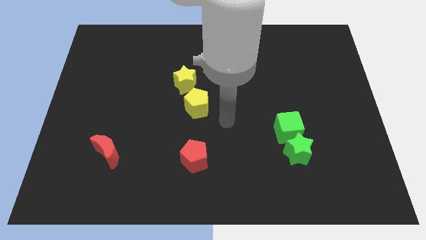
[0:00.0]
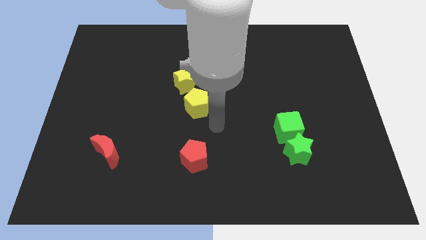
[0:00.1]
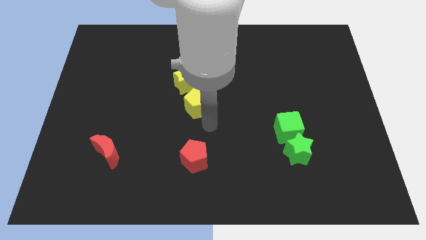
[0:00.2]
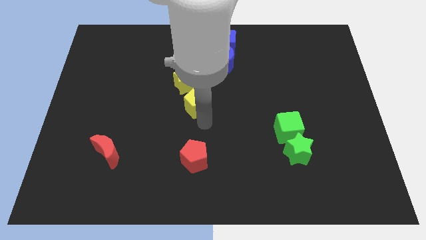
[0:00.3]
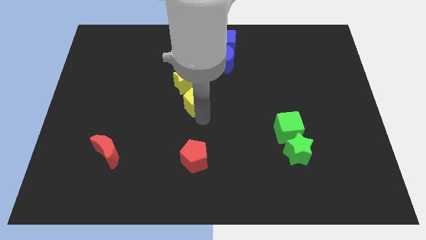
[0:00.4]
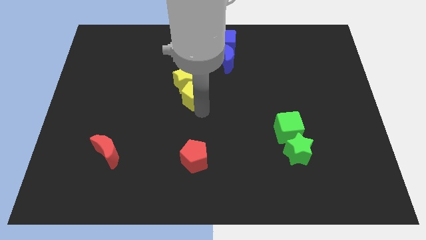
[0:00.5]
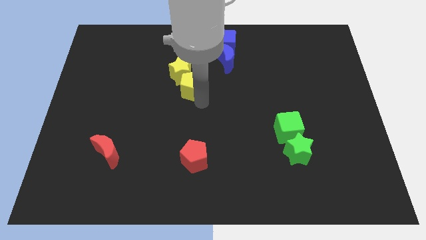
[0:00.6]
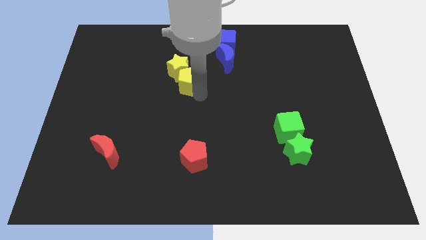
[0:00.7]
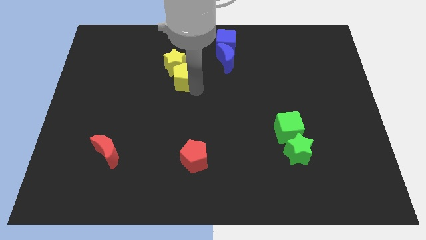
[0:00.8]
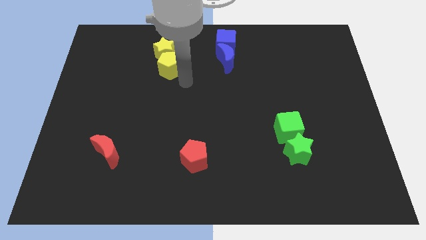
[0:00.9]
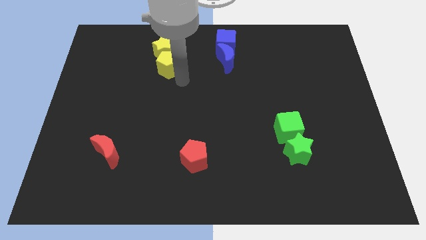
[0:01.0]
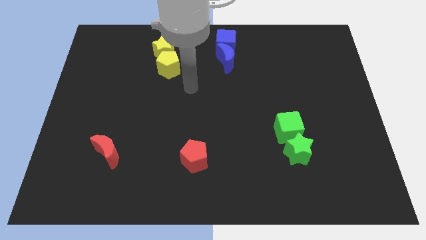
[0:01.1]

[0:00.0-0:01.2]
push the yellow pentagon into the yellow star

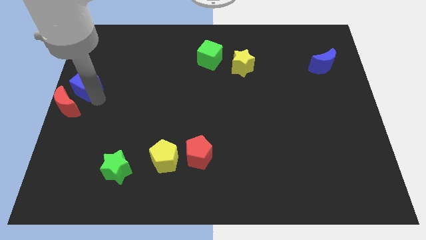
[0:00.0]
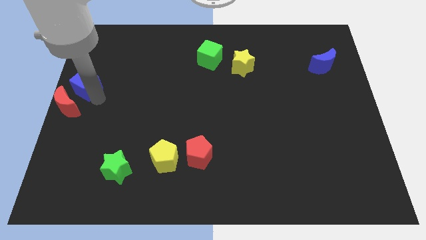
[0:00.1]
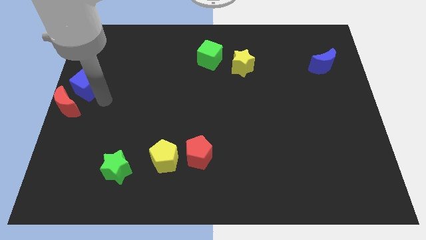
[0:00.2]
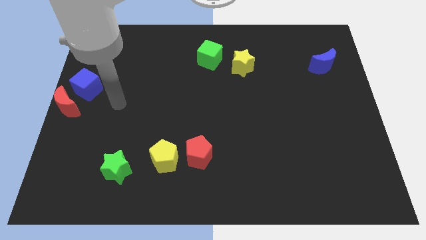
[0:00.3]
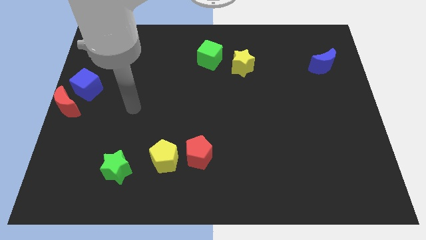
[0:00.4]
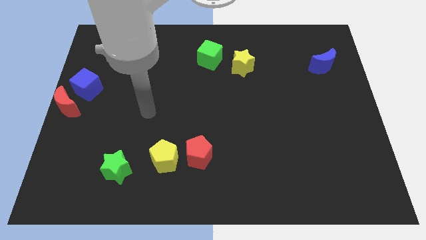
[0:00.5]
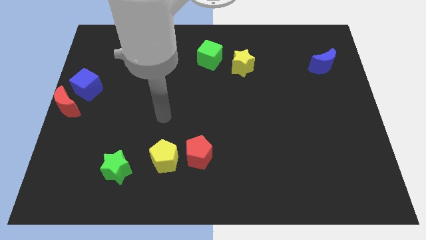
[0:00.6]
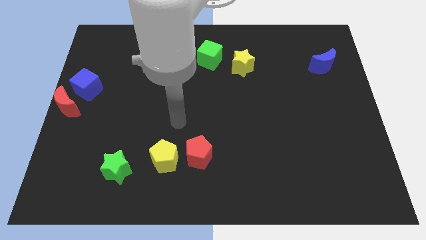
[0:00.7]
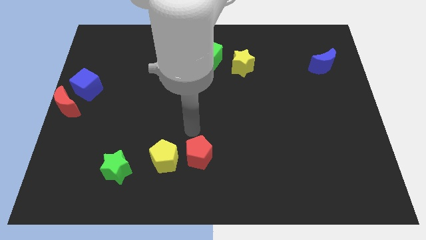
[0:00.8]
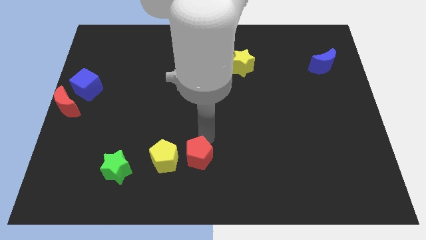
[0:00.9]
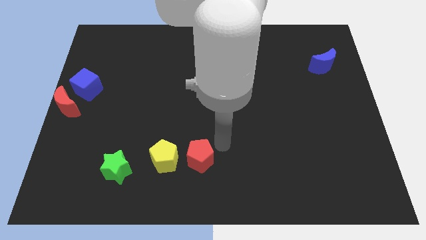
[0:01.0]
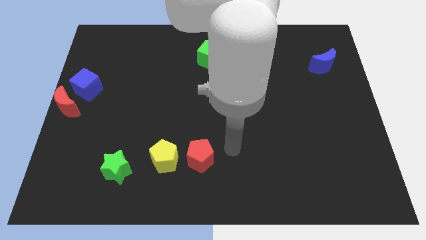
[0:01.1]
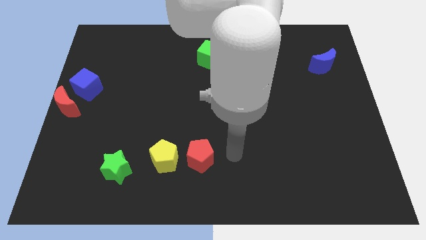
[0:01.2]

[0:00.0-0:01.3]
place your arm to the right side of the red pentagon

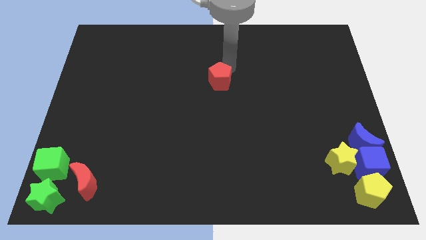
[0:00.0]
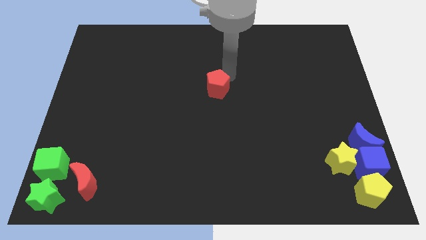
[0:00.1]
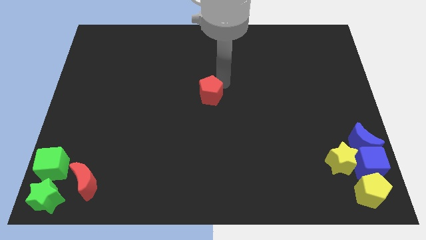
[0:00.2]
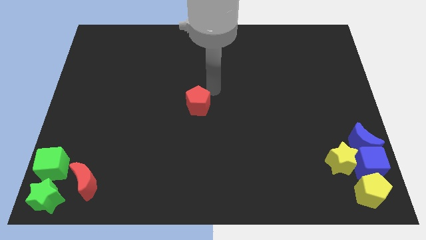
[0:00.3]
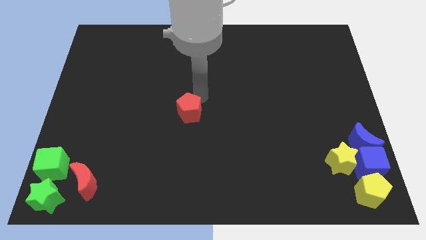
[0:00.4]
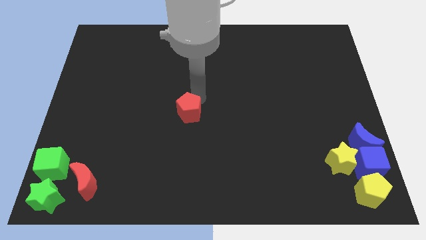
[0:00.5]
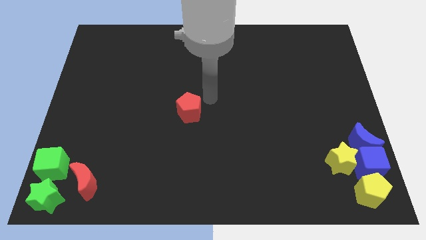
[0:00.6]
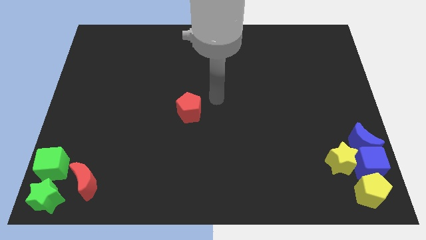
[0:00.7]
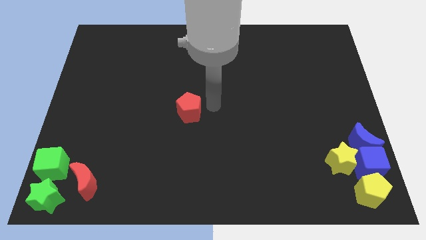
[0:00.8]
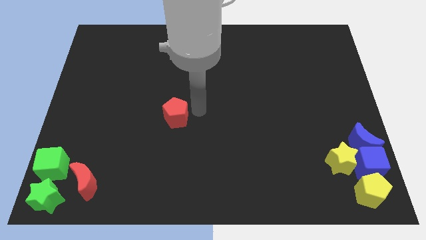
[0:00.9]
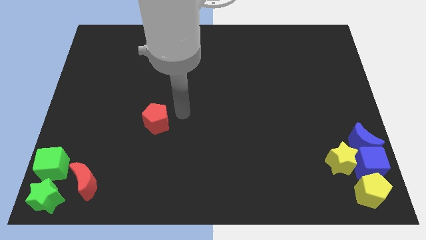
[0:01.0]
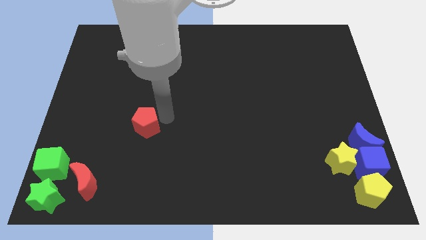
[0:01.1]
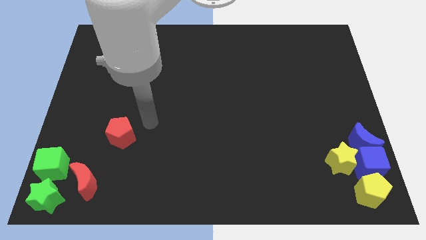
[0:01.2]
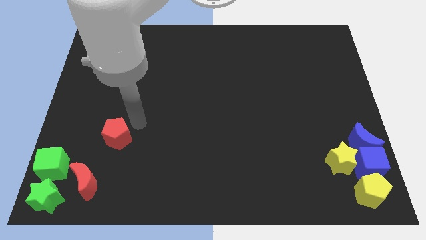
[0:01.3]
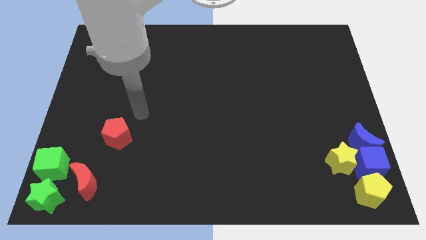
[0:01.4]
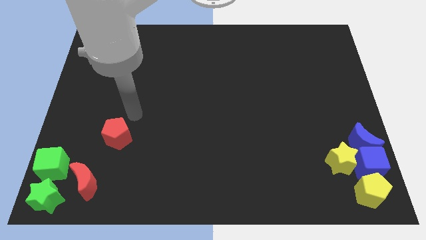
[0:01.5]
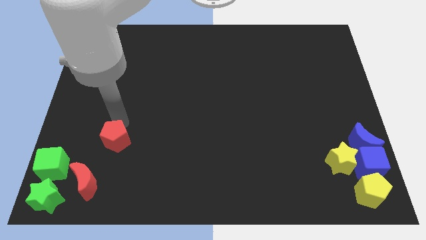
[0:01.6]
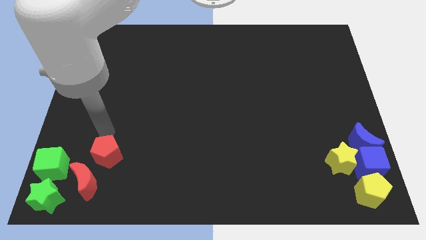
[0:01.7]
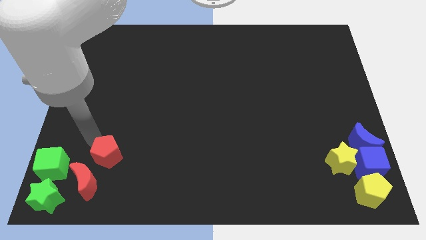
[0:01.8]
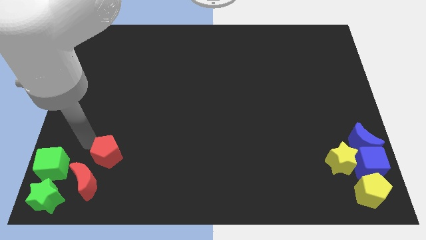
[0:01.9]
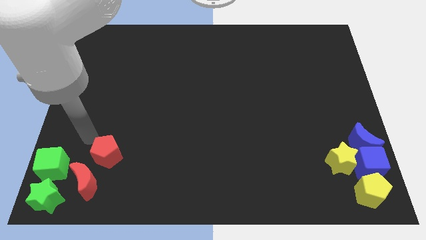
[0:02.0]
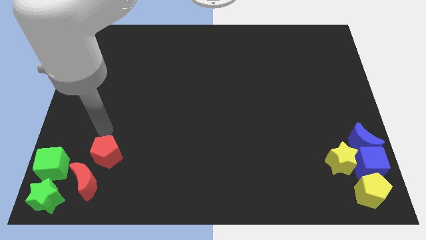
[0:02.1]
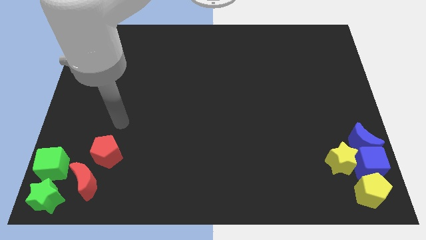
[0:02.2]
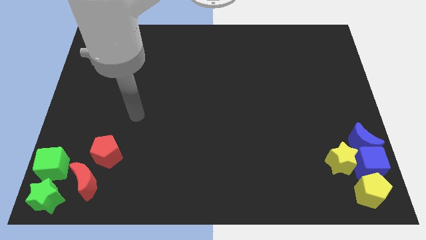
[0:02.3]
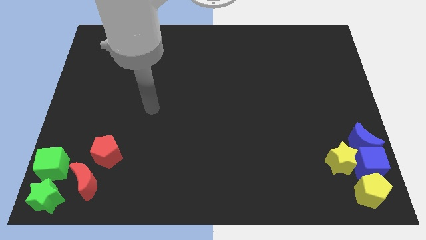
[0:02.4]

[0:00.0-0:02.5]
move the red pentagon to the group of blocks

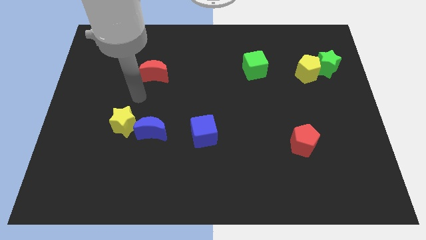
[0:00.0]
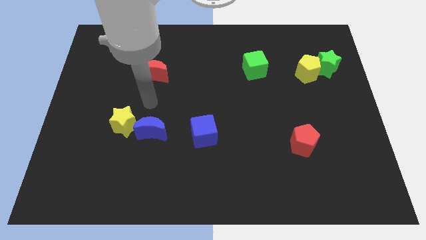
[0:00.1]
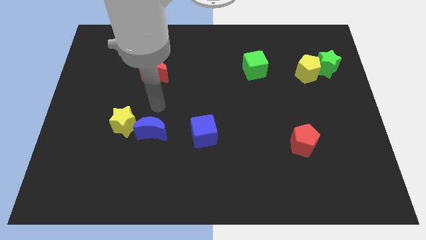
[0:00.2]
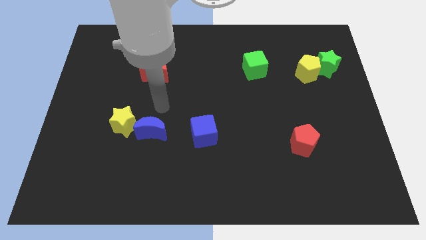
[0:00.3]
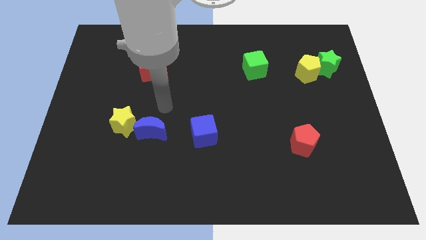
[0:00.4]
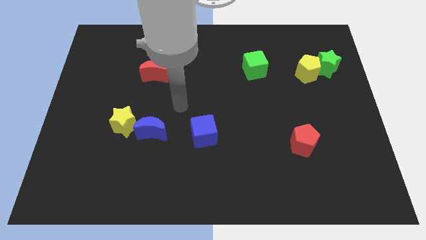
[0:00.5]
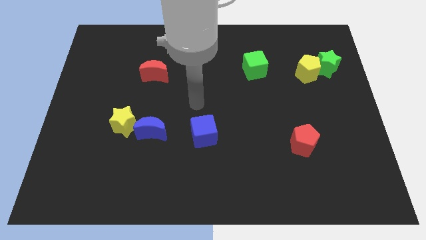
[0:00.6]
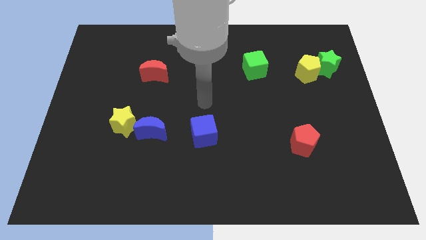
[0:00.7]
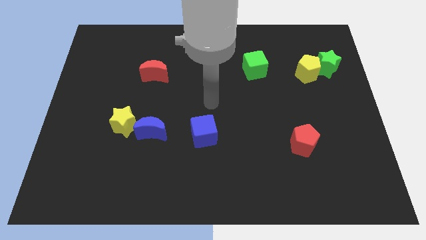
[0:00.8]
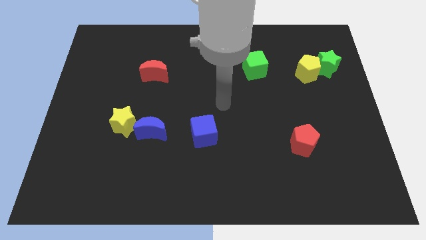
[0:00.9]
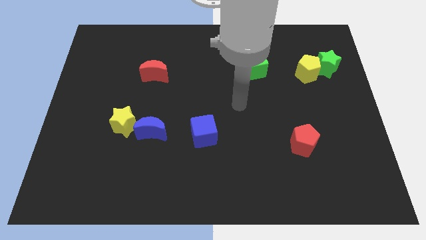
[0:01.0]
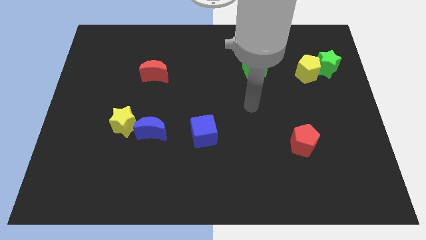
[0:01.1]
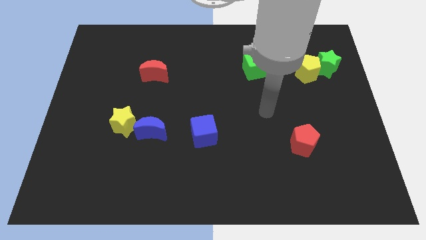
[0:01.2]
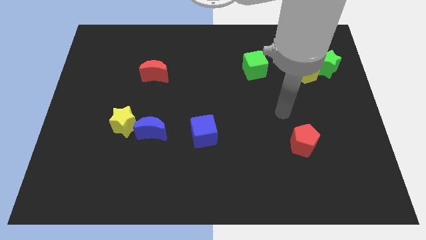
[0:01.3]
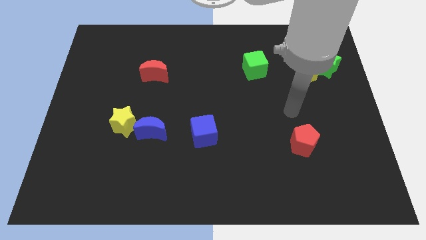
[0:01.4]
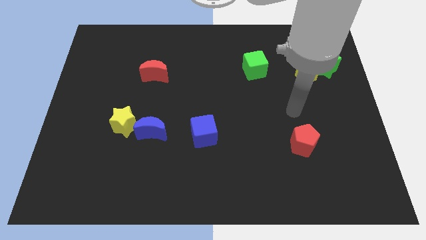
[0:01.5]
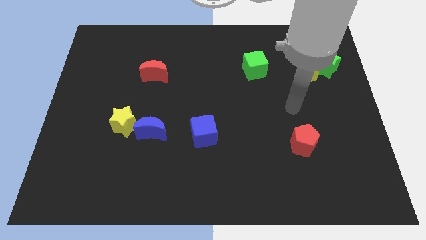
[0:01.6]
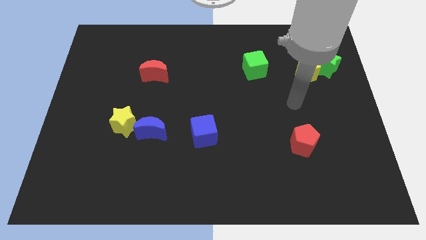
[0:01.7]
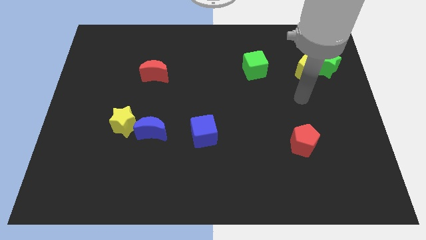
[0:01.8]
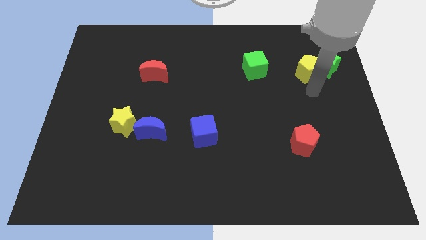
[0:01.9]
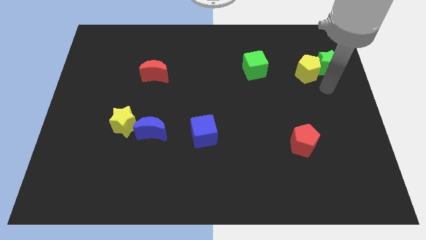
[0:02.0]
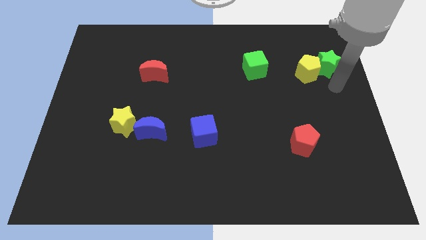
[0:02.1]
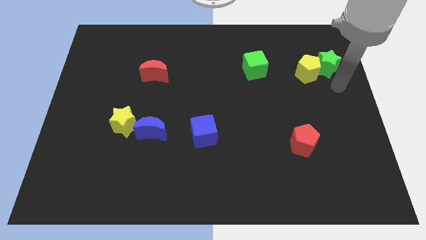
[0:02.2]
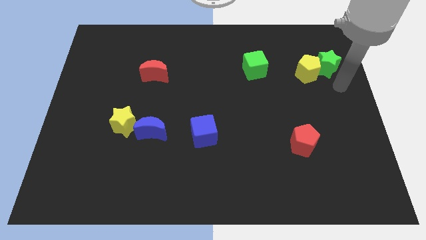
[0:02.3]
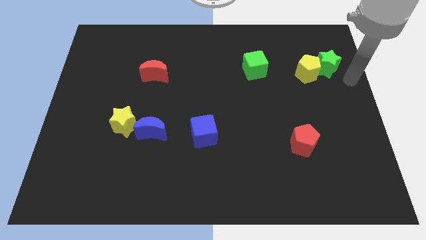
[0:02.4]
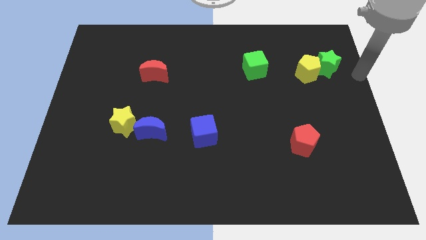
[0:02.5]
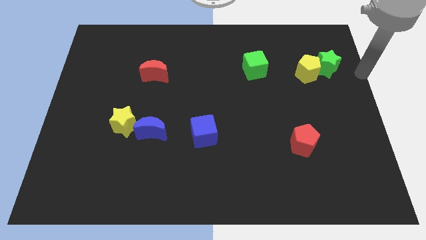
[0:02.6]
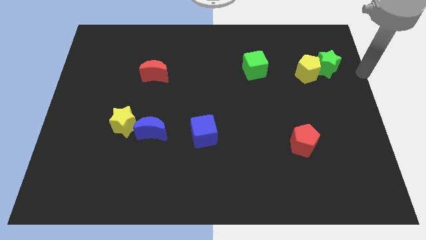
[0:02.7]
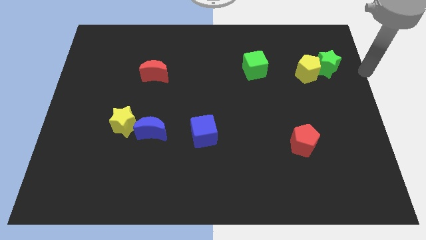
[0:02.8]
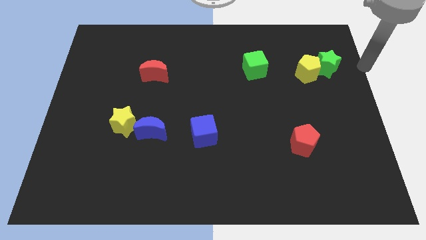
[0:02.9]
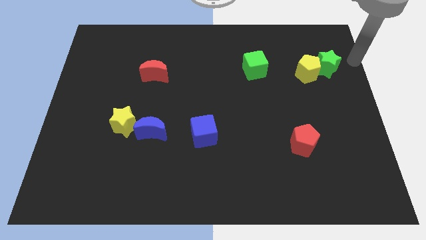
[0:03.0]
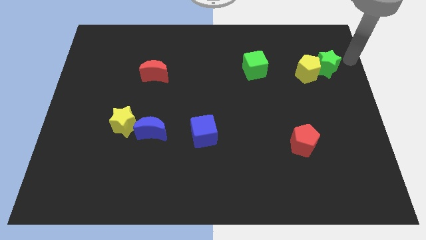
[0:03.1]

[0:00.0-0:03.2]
place your arm to the top right side of the green star

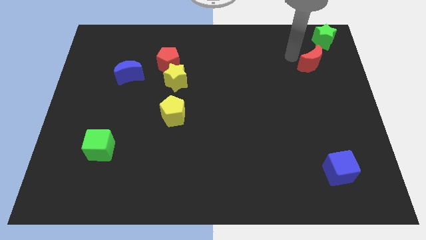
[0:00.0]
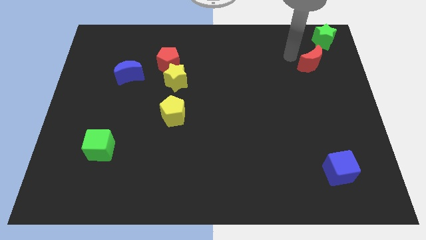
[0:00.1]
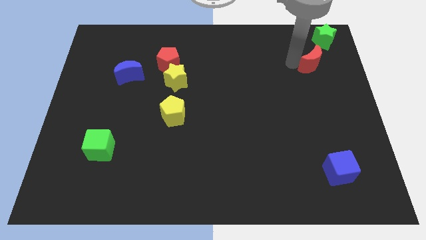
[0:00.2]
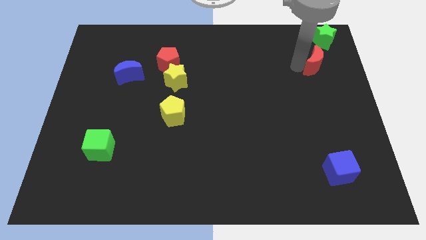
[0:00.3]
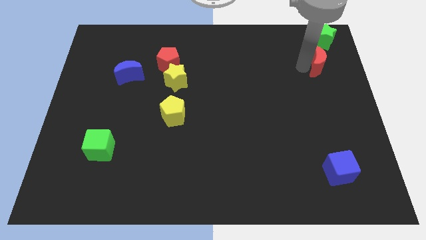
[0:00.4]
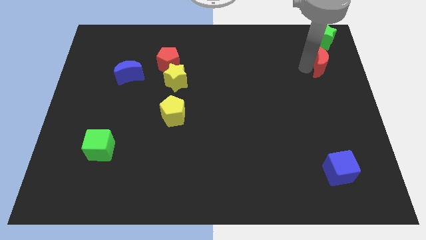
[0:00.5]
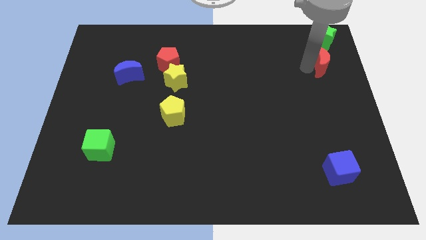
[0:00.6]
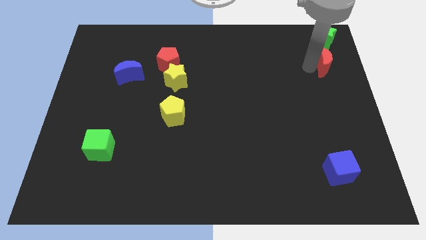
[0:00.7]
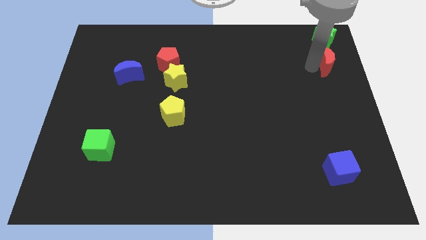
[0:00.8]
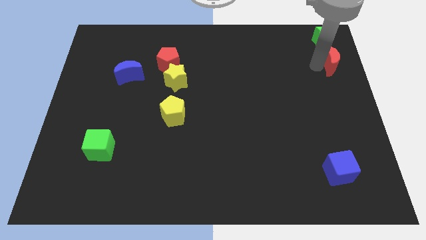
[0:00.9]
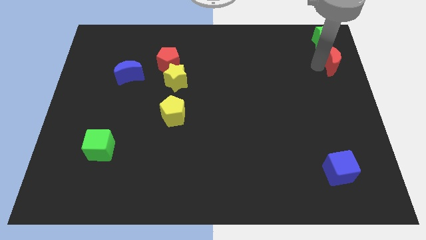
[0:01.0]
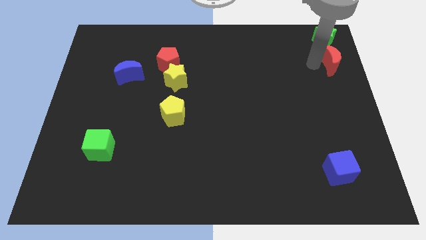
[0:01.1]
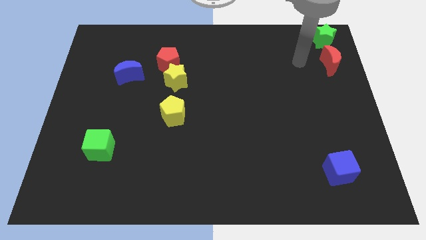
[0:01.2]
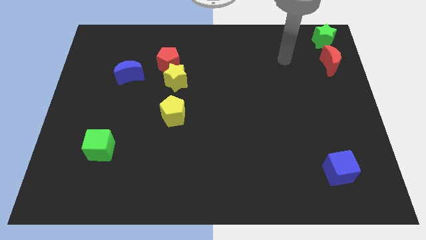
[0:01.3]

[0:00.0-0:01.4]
place the red crescent under the green star
